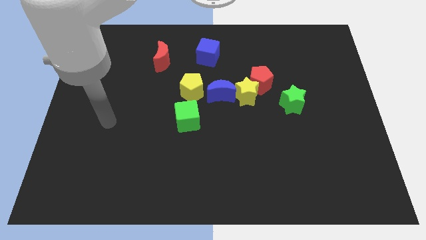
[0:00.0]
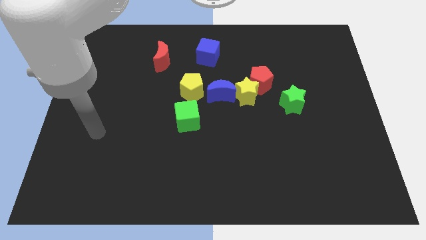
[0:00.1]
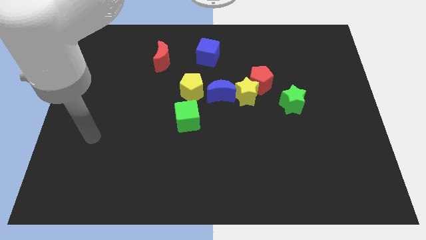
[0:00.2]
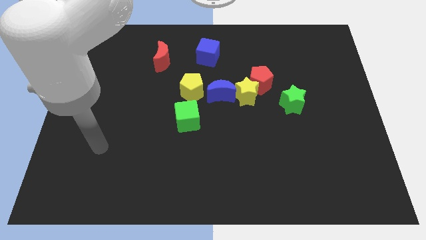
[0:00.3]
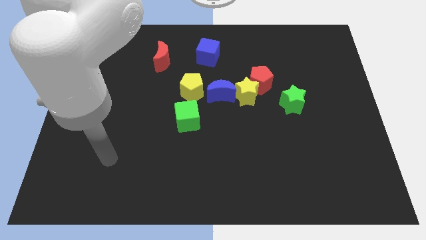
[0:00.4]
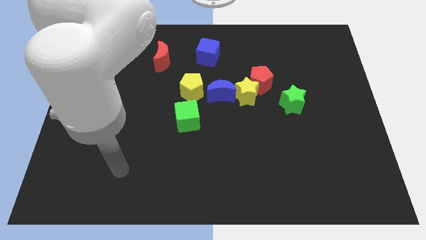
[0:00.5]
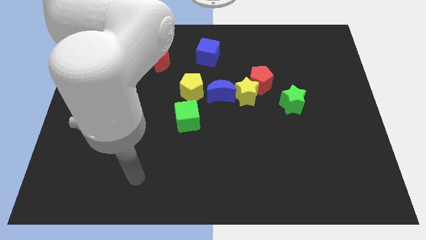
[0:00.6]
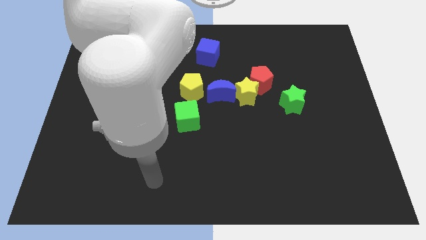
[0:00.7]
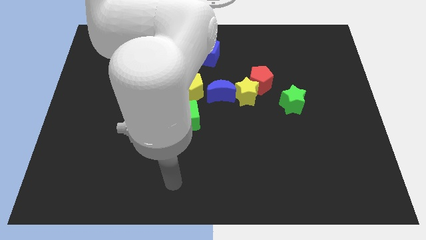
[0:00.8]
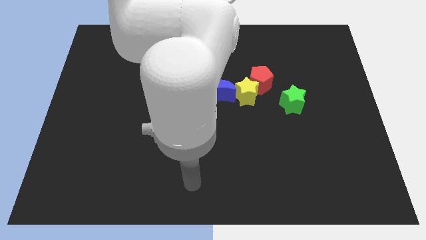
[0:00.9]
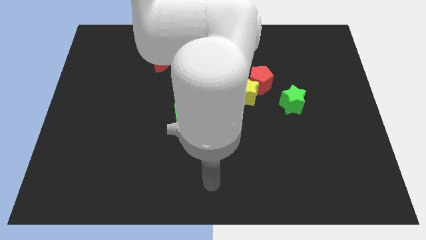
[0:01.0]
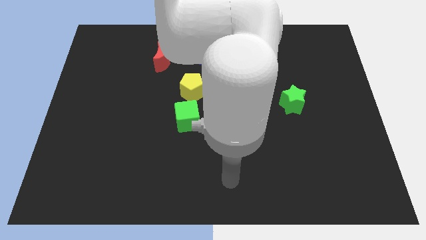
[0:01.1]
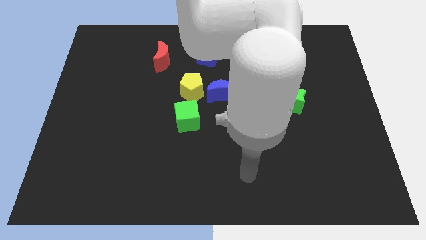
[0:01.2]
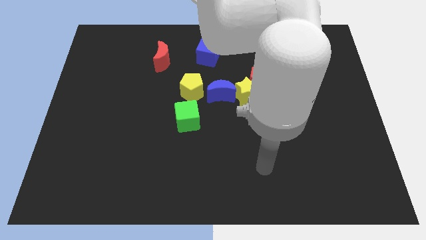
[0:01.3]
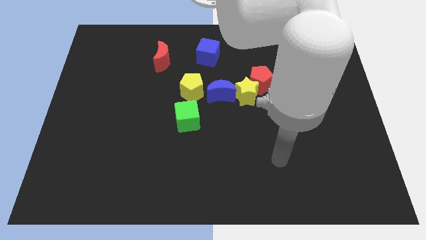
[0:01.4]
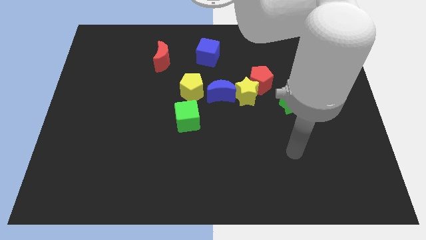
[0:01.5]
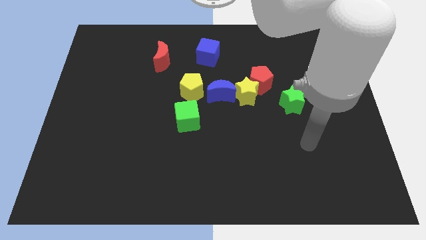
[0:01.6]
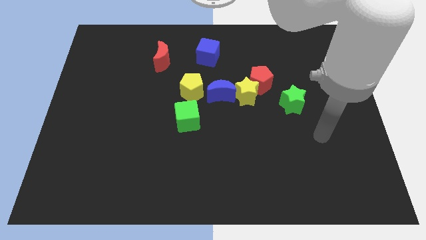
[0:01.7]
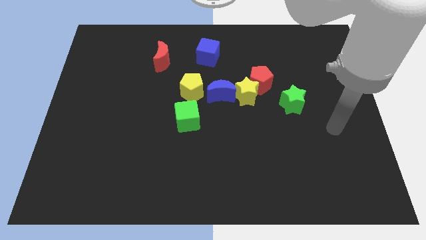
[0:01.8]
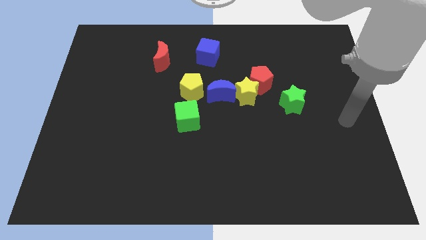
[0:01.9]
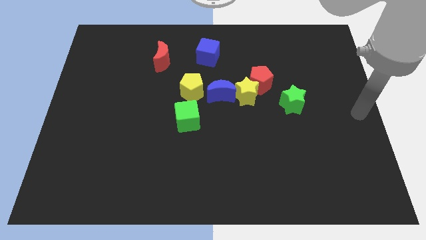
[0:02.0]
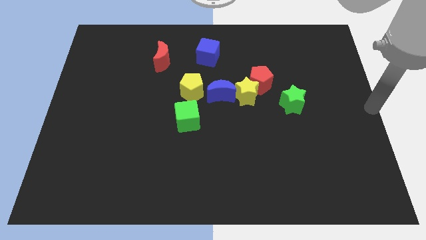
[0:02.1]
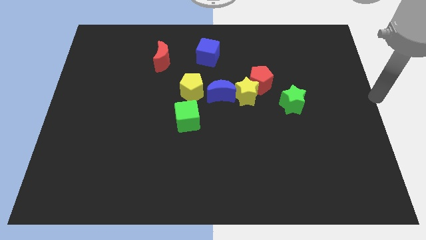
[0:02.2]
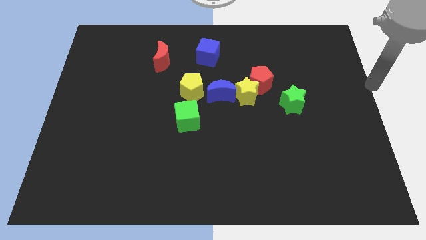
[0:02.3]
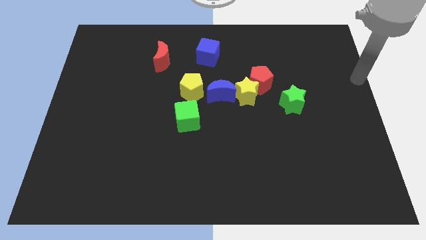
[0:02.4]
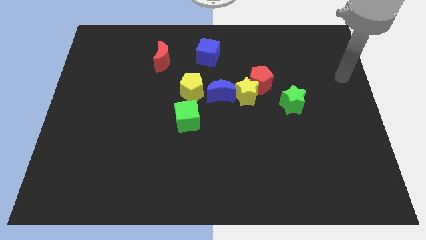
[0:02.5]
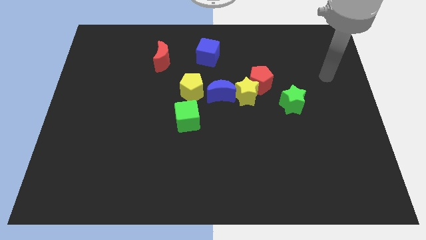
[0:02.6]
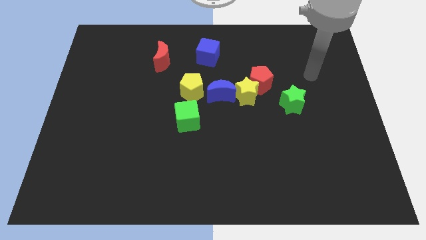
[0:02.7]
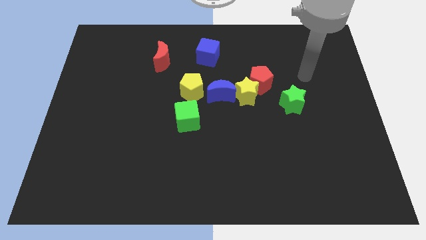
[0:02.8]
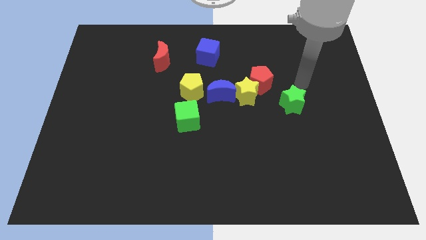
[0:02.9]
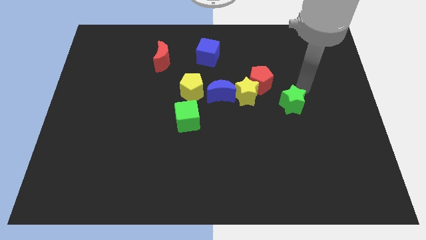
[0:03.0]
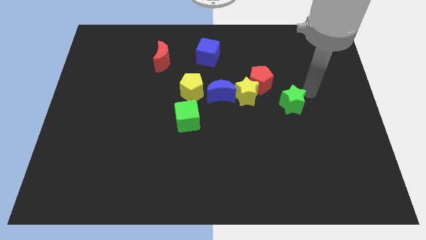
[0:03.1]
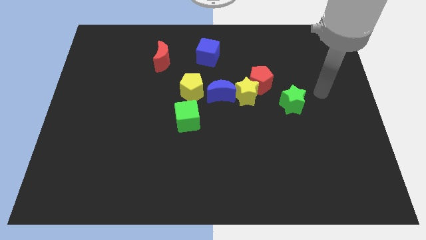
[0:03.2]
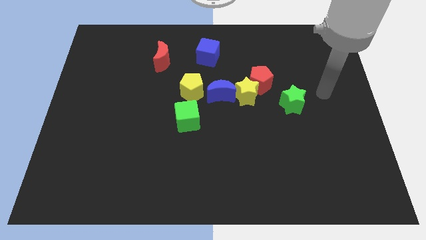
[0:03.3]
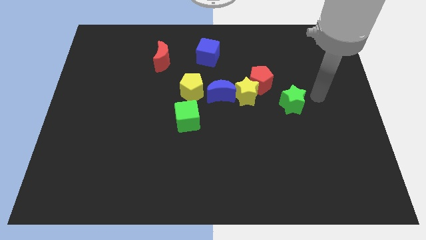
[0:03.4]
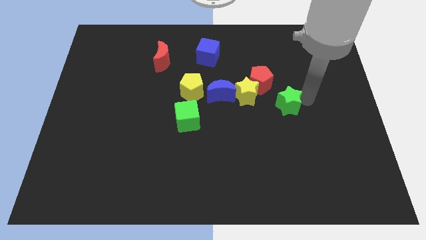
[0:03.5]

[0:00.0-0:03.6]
tap green star

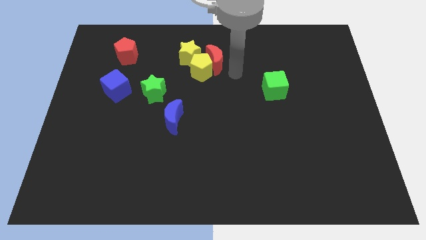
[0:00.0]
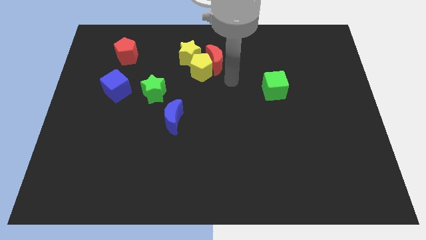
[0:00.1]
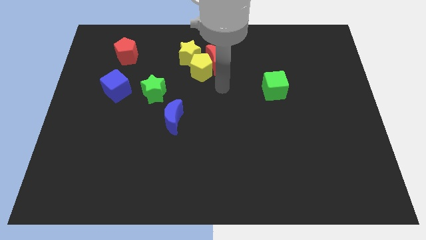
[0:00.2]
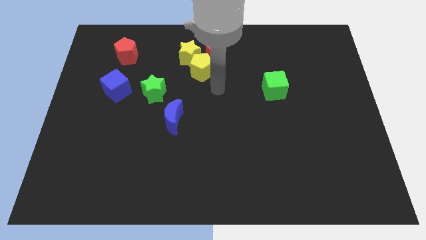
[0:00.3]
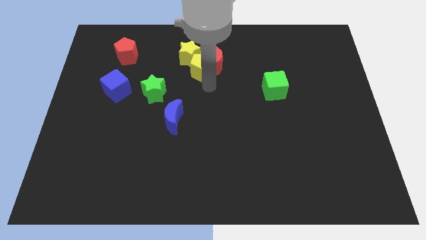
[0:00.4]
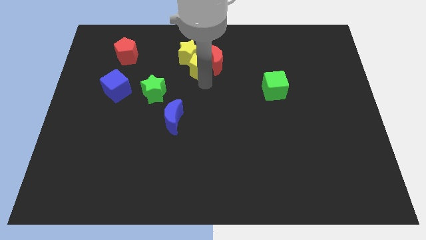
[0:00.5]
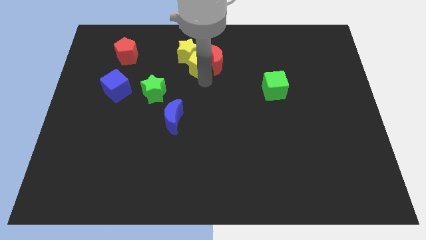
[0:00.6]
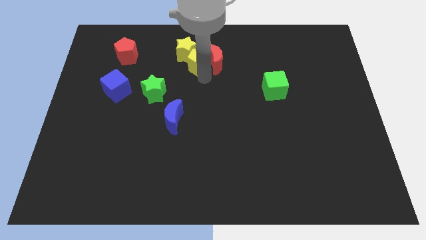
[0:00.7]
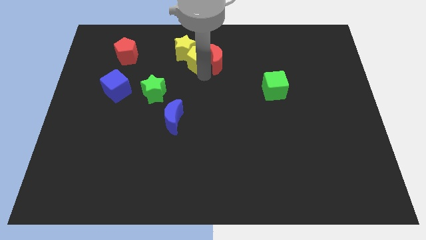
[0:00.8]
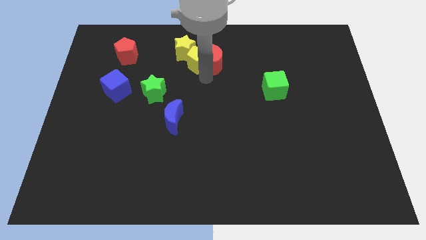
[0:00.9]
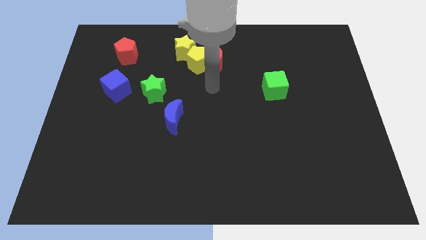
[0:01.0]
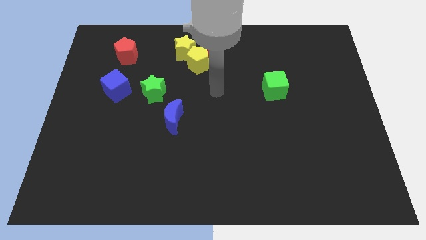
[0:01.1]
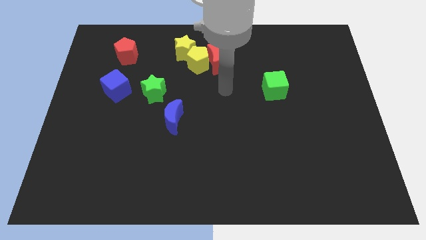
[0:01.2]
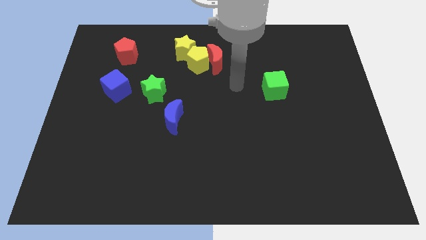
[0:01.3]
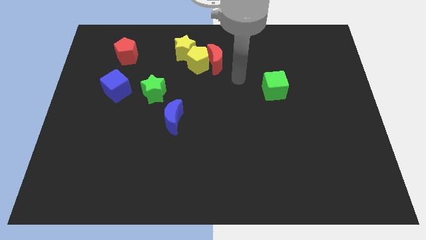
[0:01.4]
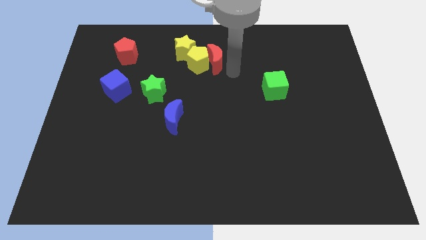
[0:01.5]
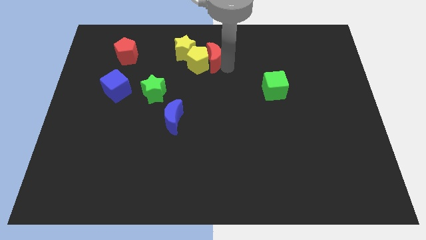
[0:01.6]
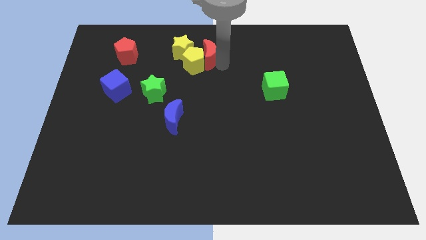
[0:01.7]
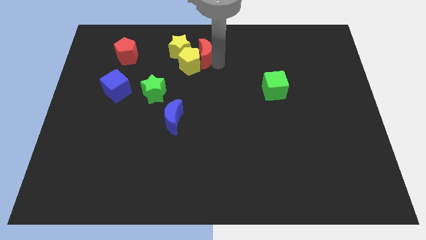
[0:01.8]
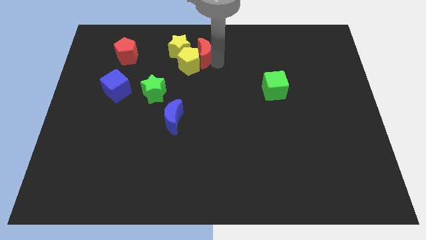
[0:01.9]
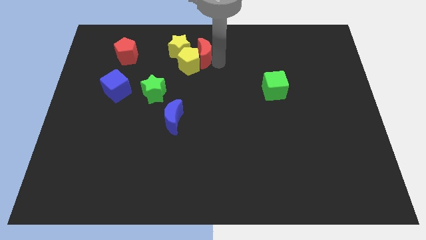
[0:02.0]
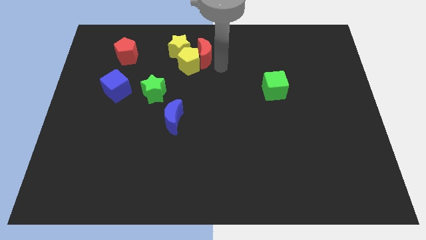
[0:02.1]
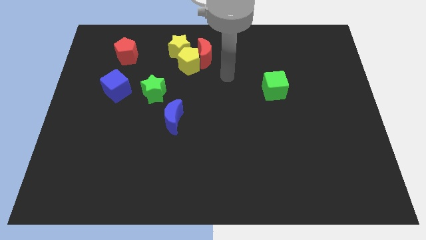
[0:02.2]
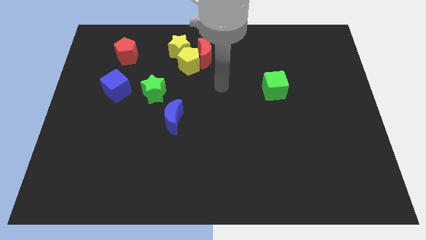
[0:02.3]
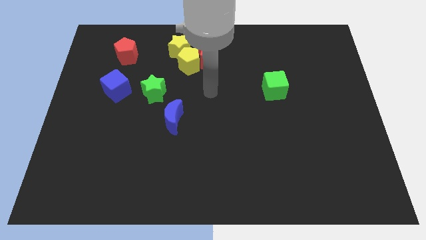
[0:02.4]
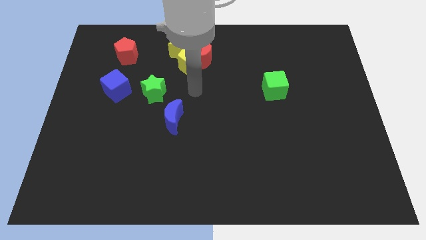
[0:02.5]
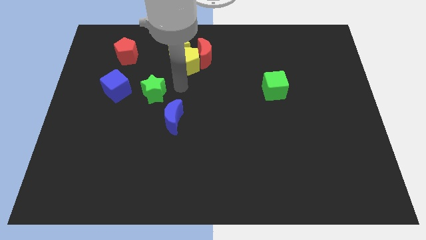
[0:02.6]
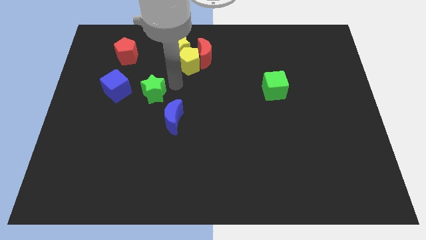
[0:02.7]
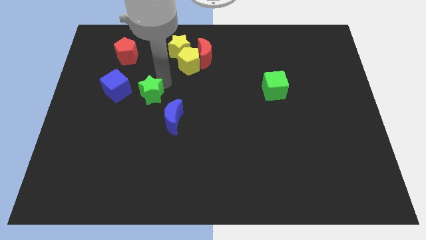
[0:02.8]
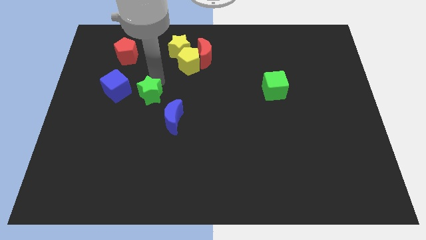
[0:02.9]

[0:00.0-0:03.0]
move red crescent yellow pentagon and yellow star towards left

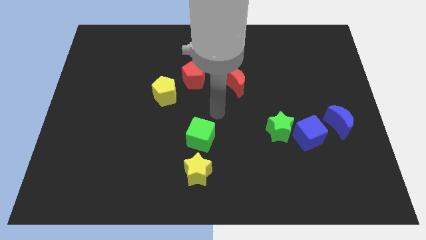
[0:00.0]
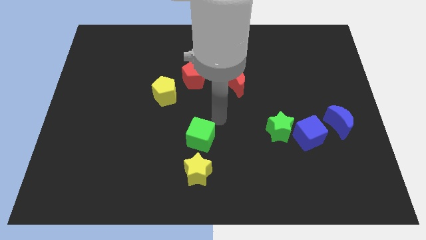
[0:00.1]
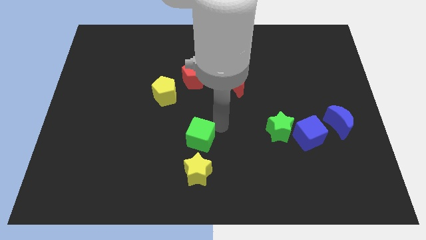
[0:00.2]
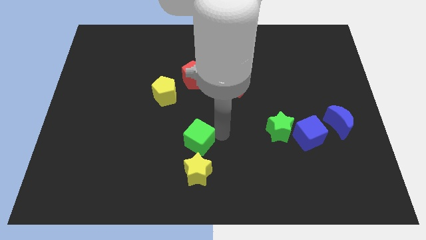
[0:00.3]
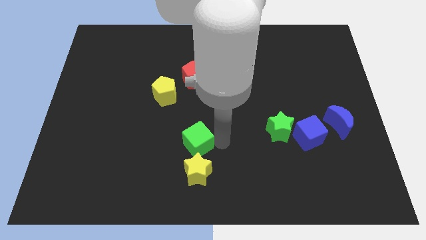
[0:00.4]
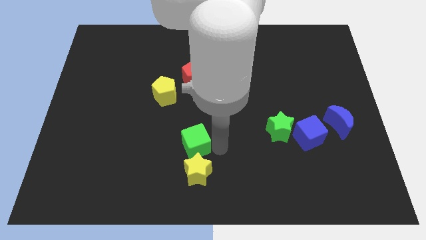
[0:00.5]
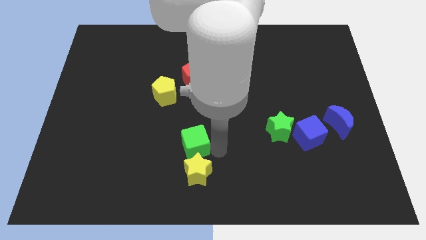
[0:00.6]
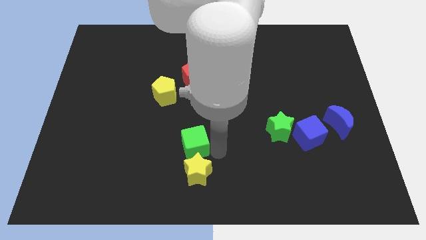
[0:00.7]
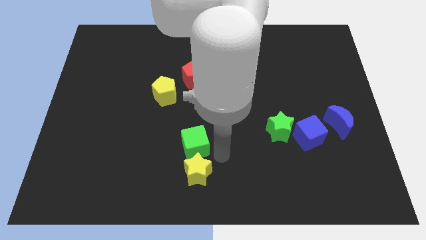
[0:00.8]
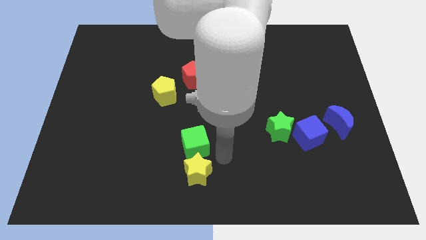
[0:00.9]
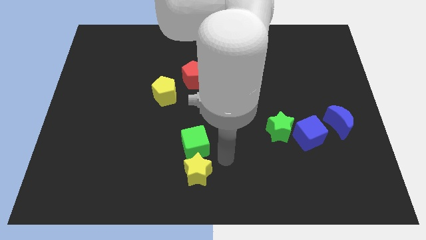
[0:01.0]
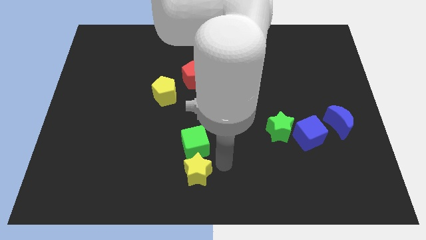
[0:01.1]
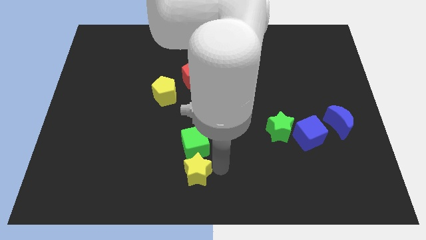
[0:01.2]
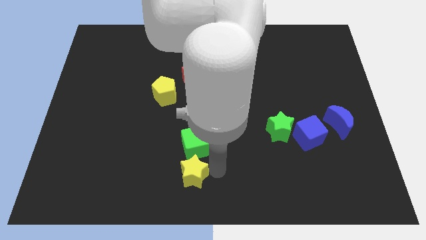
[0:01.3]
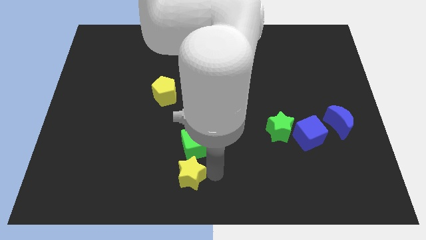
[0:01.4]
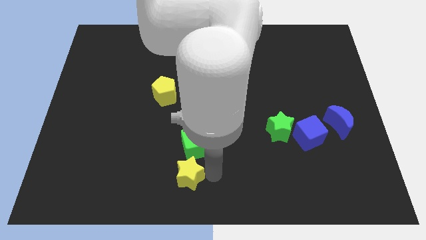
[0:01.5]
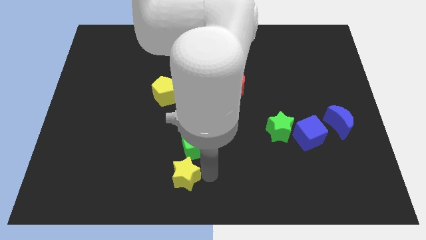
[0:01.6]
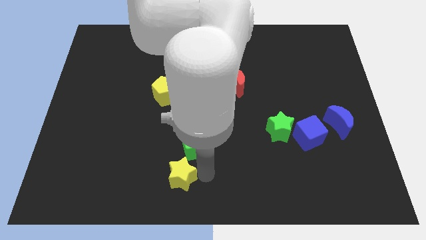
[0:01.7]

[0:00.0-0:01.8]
place the green cube above the yellow star

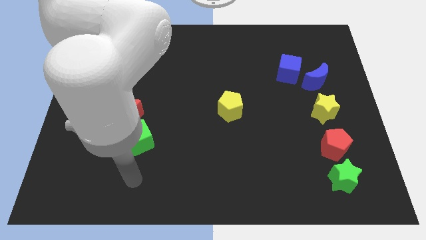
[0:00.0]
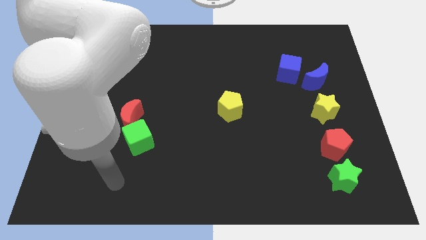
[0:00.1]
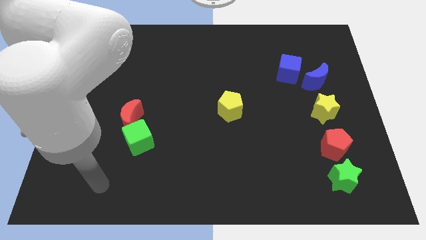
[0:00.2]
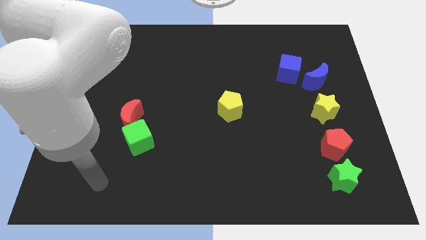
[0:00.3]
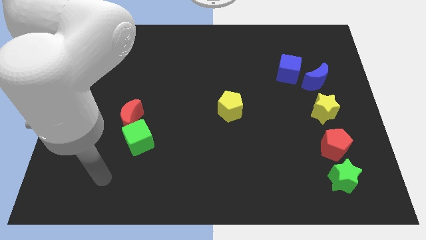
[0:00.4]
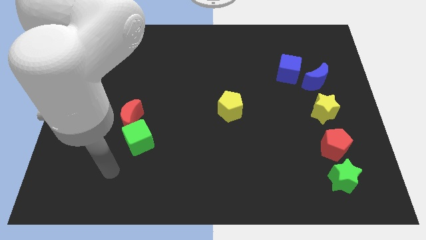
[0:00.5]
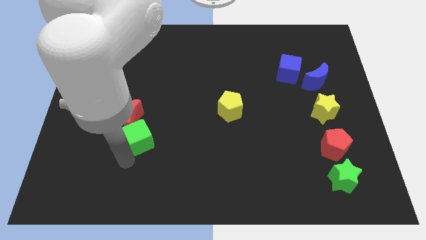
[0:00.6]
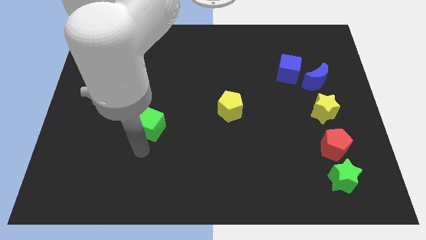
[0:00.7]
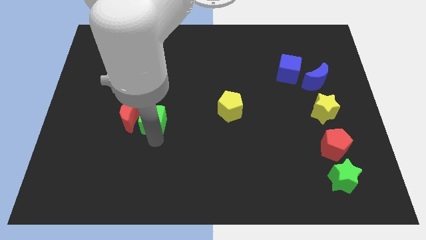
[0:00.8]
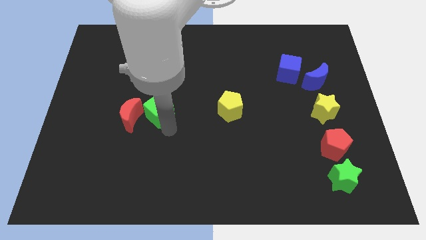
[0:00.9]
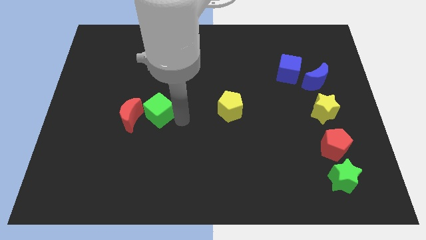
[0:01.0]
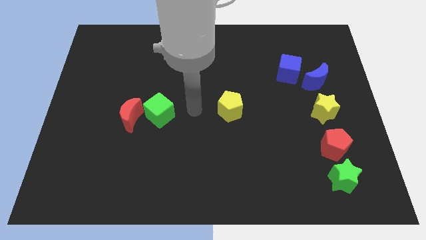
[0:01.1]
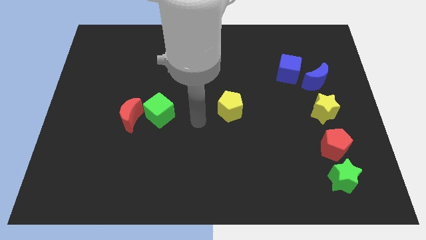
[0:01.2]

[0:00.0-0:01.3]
push the green cube to the right of red moon
